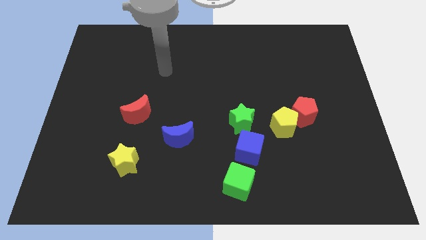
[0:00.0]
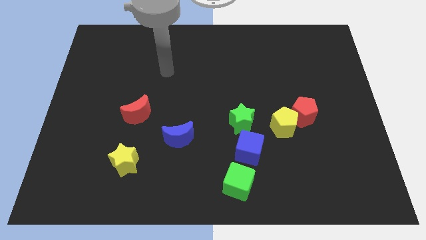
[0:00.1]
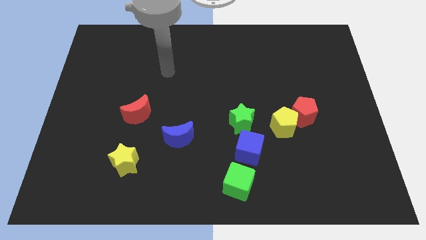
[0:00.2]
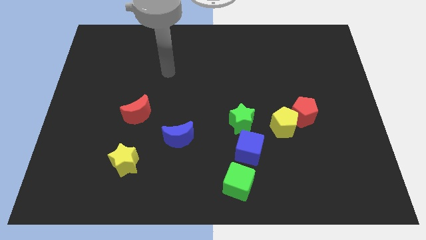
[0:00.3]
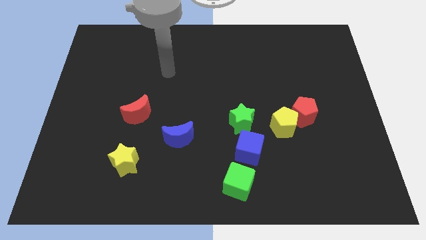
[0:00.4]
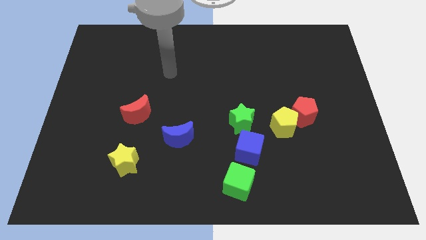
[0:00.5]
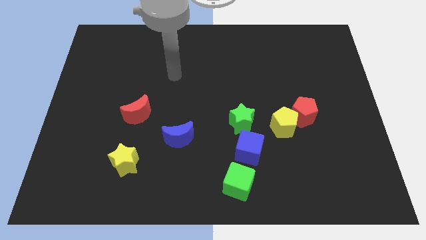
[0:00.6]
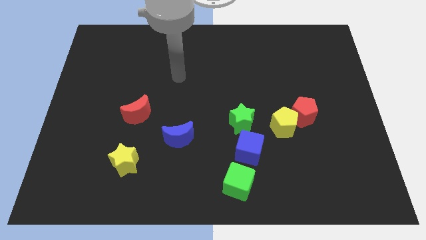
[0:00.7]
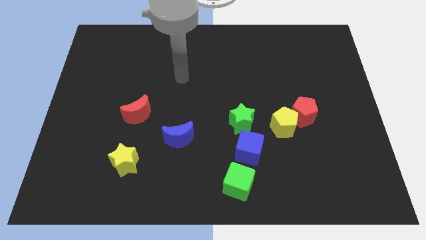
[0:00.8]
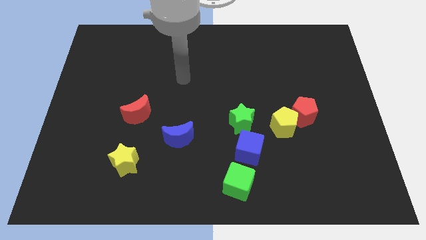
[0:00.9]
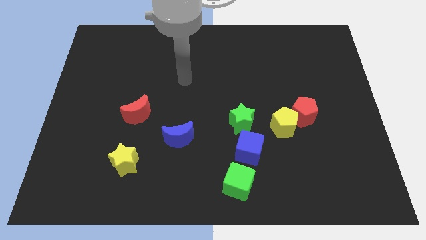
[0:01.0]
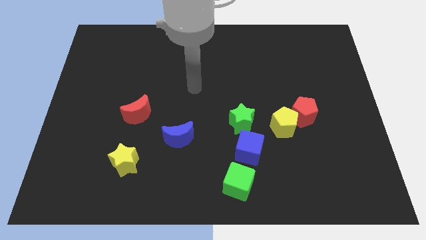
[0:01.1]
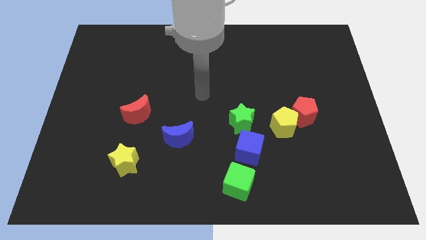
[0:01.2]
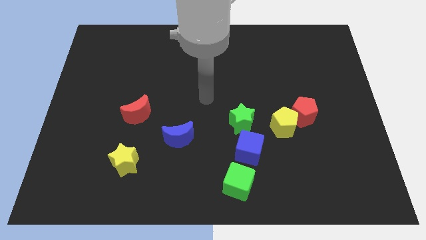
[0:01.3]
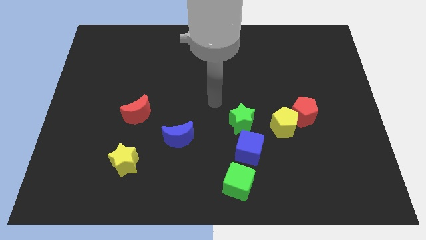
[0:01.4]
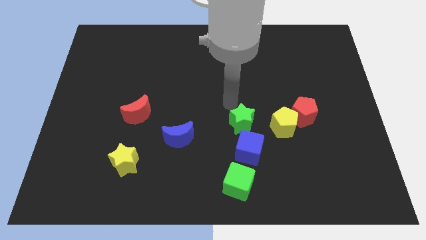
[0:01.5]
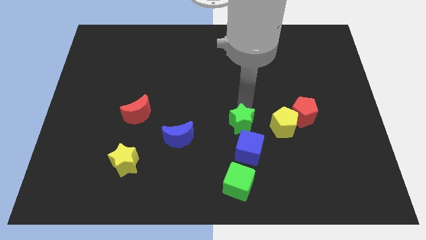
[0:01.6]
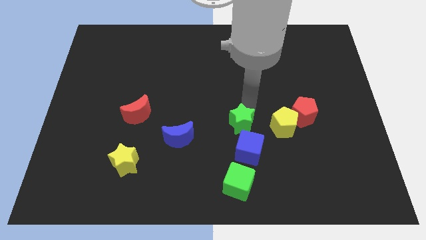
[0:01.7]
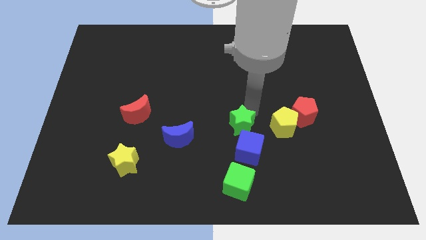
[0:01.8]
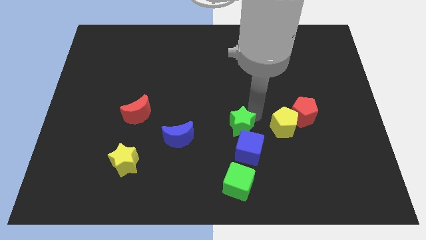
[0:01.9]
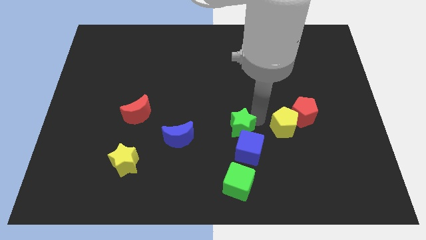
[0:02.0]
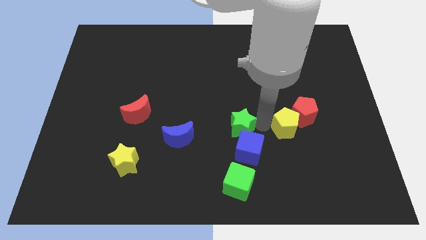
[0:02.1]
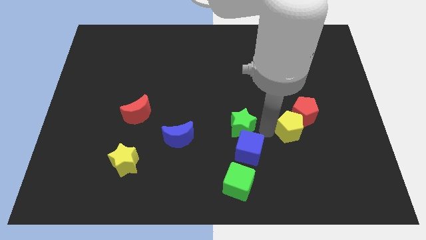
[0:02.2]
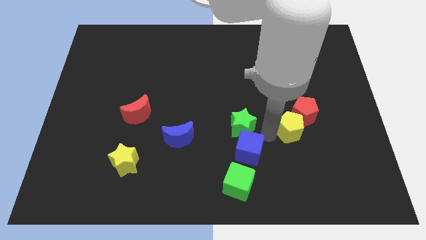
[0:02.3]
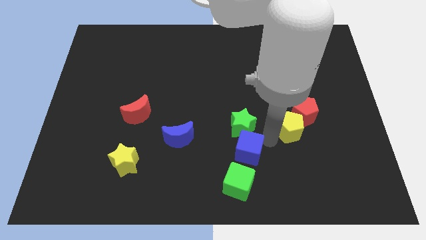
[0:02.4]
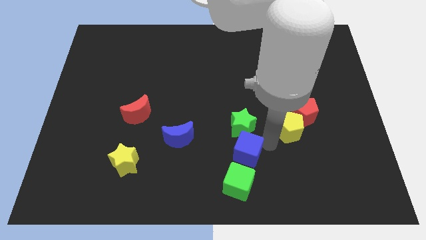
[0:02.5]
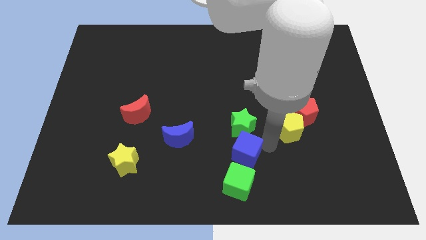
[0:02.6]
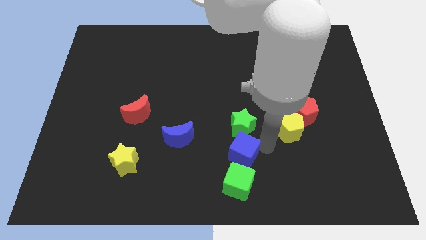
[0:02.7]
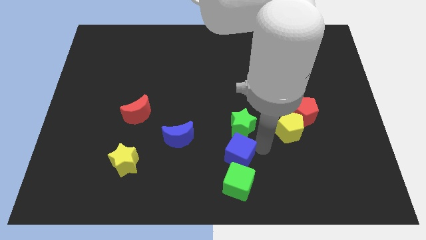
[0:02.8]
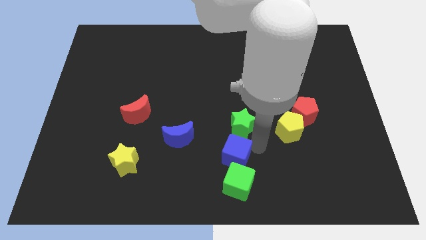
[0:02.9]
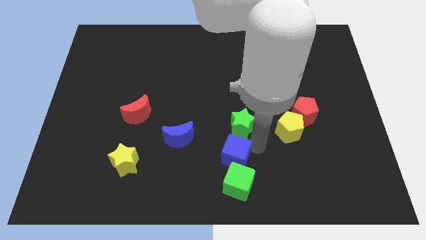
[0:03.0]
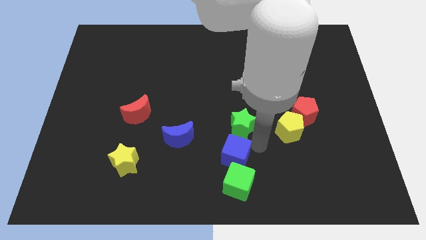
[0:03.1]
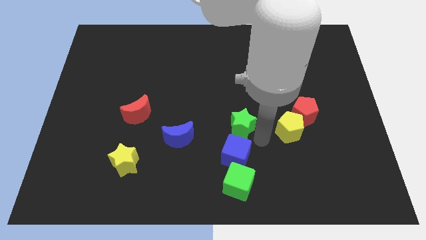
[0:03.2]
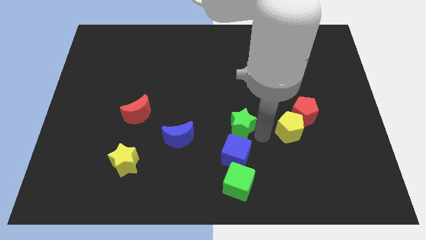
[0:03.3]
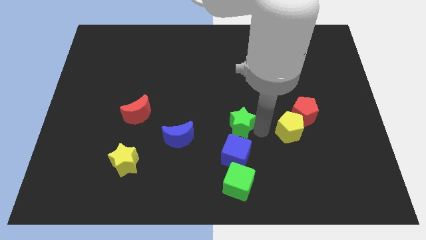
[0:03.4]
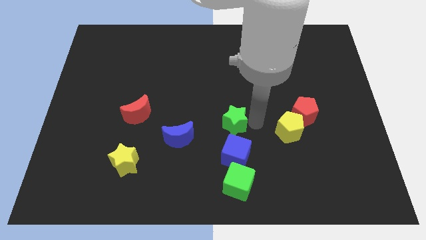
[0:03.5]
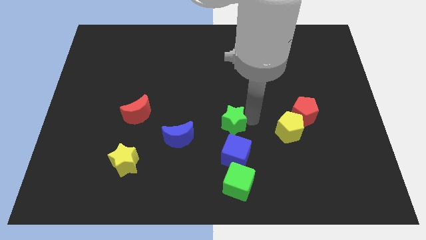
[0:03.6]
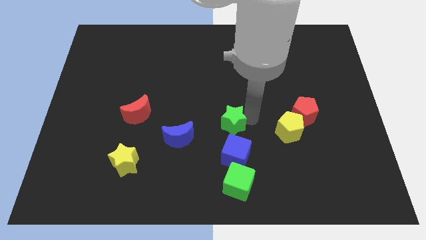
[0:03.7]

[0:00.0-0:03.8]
place the green star right to the blue moon

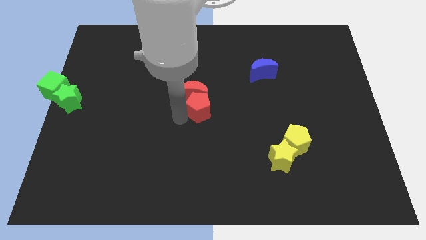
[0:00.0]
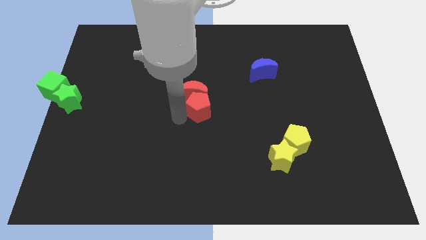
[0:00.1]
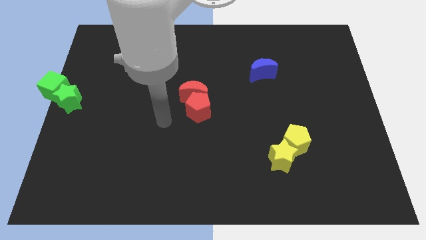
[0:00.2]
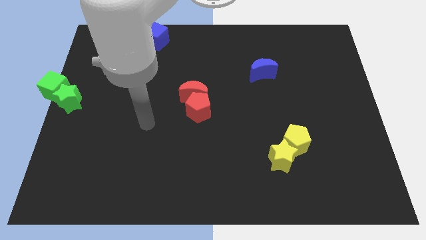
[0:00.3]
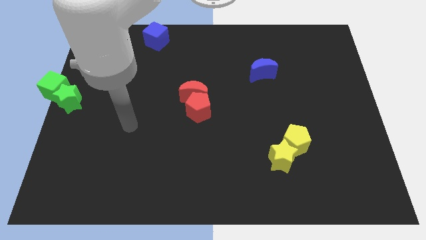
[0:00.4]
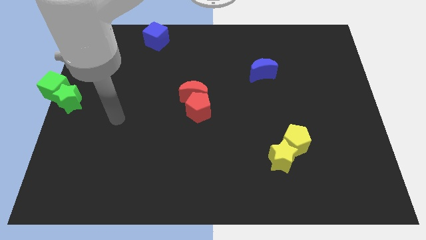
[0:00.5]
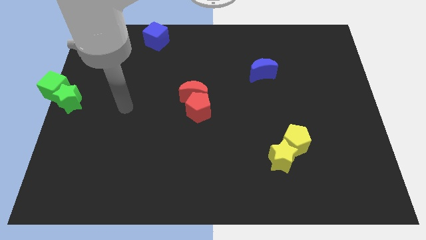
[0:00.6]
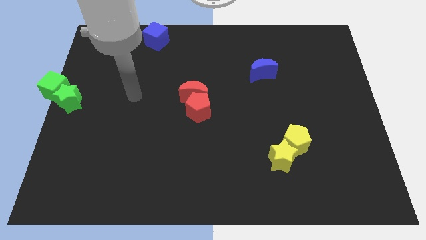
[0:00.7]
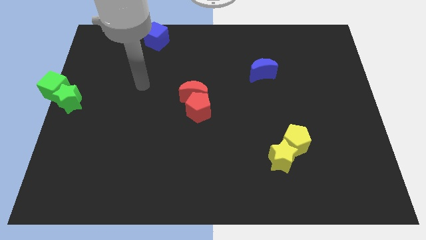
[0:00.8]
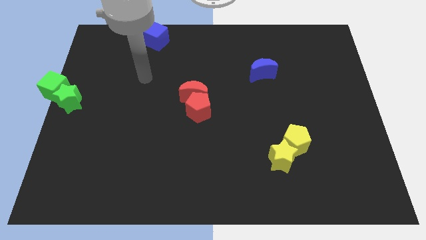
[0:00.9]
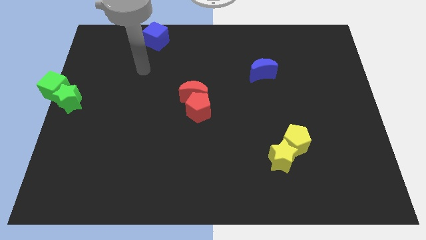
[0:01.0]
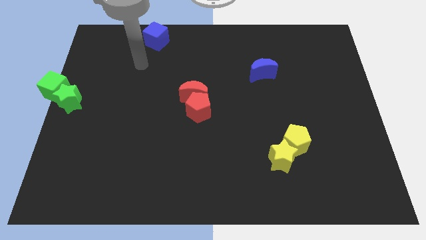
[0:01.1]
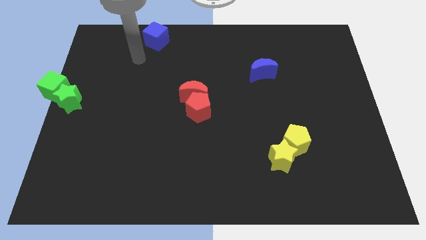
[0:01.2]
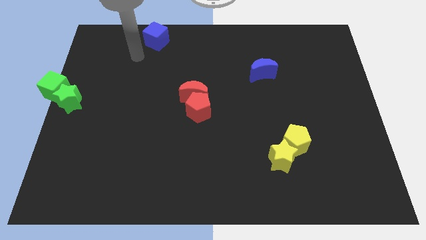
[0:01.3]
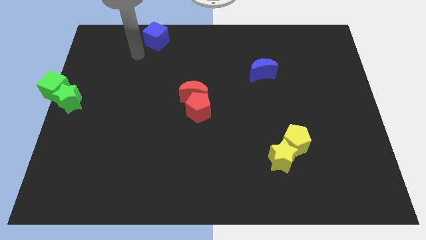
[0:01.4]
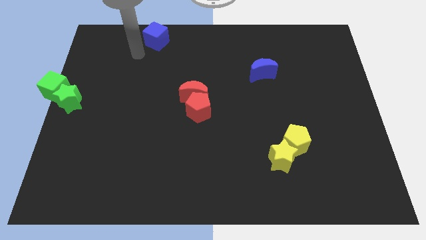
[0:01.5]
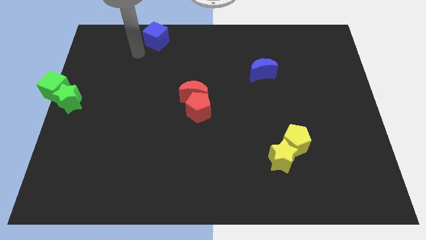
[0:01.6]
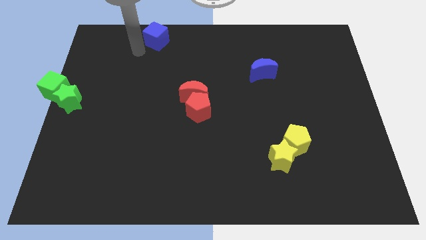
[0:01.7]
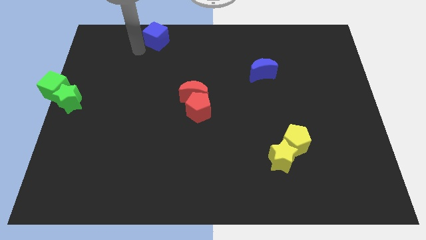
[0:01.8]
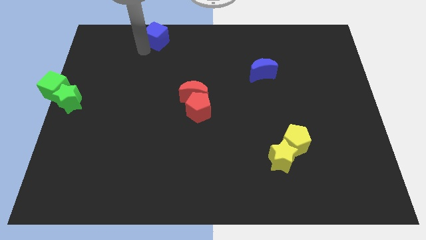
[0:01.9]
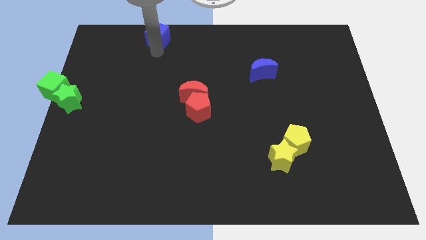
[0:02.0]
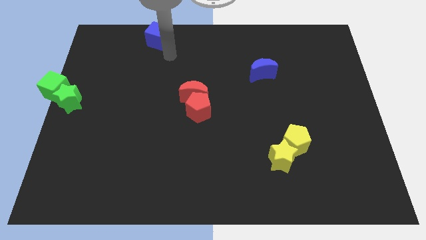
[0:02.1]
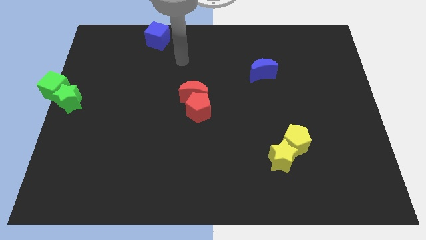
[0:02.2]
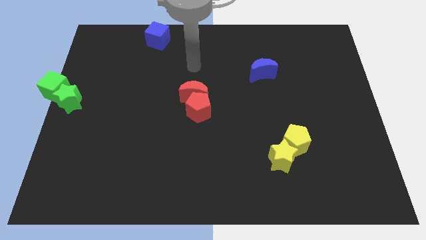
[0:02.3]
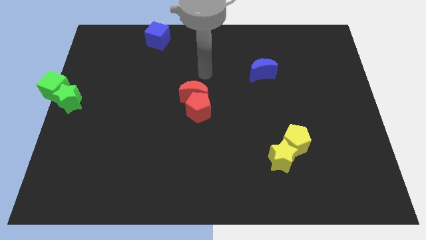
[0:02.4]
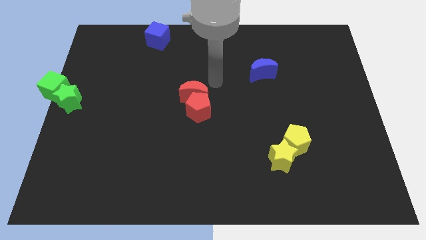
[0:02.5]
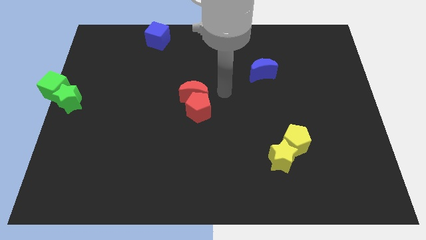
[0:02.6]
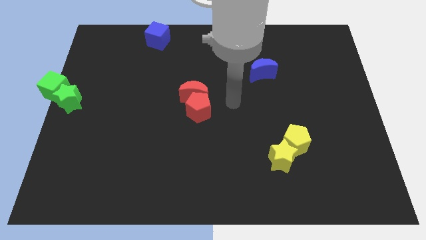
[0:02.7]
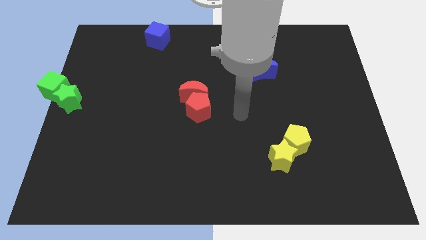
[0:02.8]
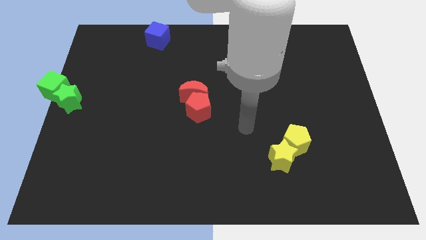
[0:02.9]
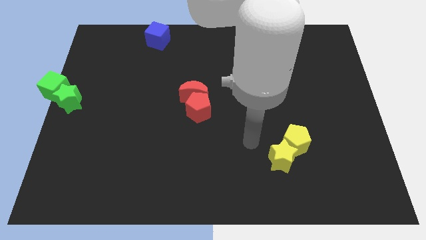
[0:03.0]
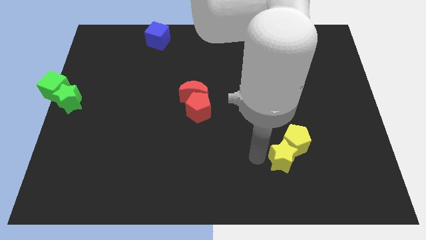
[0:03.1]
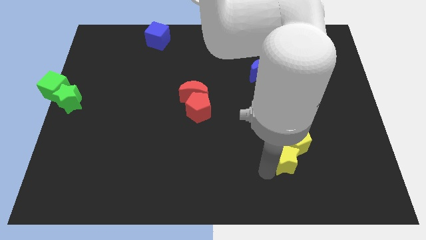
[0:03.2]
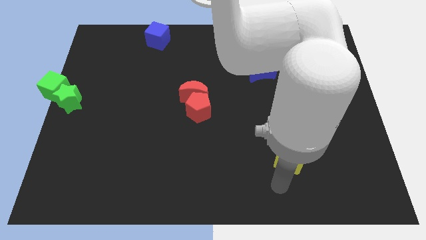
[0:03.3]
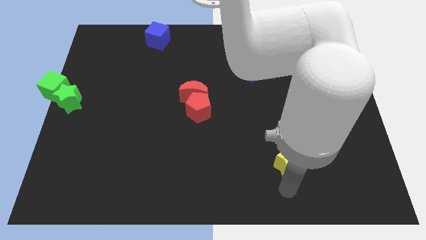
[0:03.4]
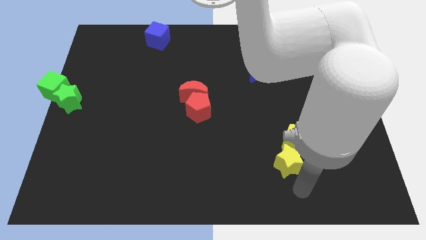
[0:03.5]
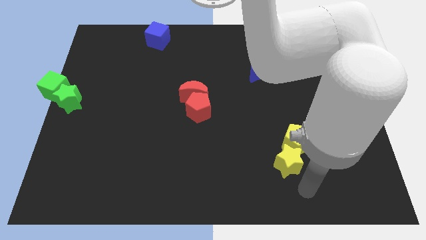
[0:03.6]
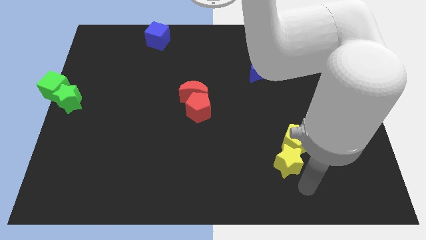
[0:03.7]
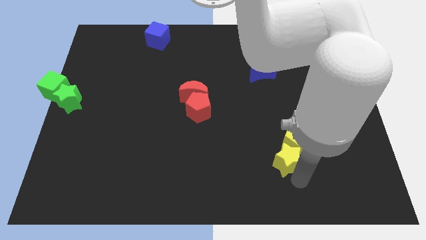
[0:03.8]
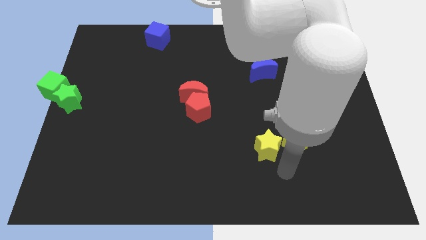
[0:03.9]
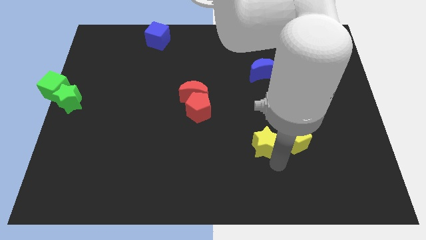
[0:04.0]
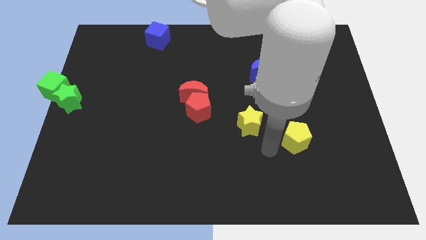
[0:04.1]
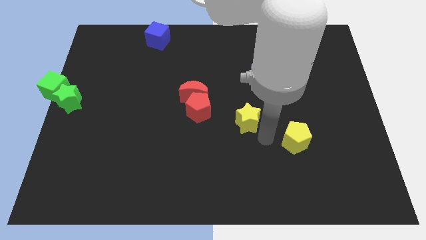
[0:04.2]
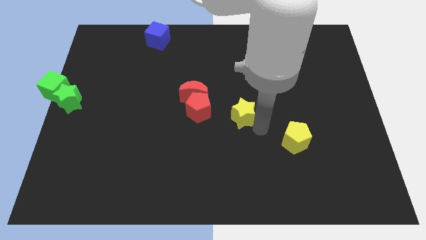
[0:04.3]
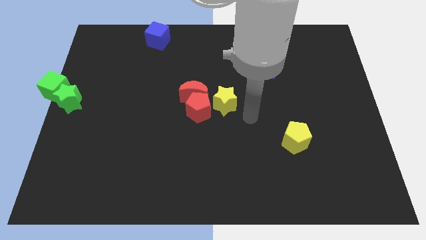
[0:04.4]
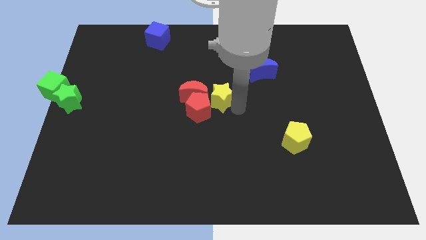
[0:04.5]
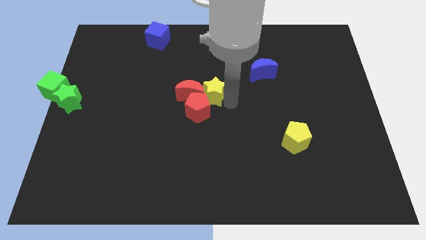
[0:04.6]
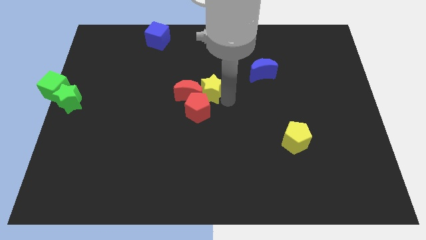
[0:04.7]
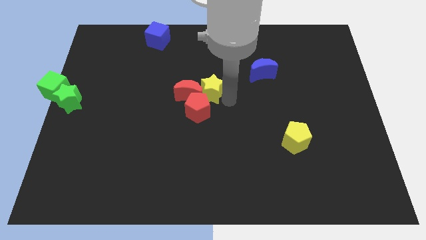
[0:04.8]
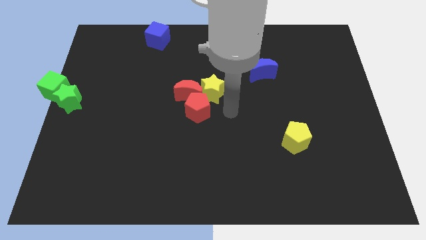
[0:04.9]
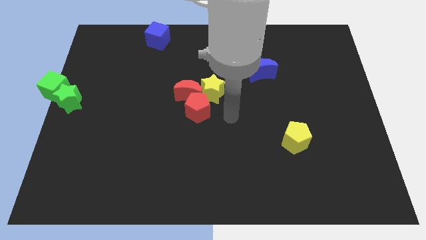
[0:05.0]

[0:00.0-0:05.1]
separate yellow star from the yellow pentagon

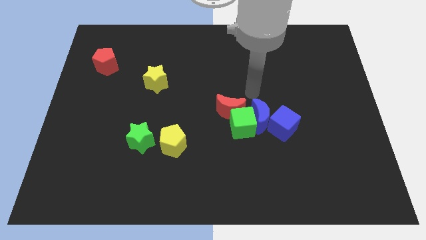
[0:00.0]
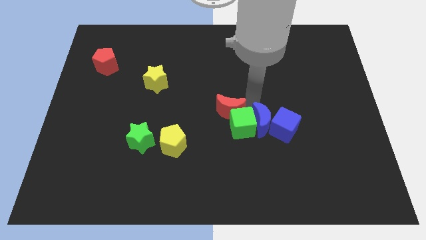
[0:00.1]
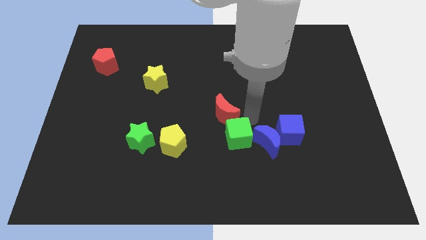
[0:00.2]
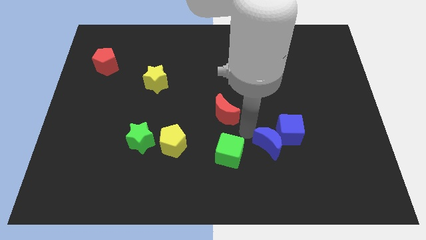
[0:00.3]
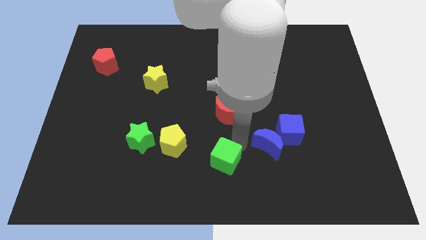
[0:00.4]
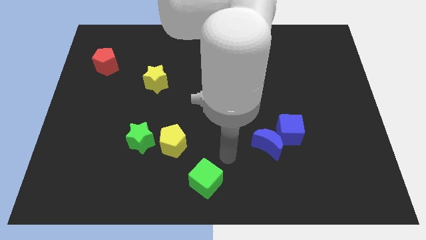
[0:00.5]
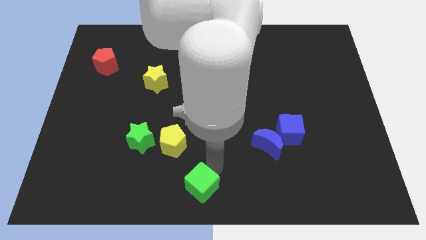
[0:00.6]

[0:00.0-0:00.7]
move green cube diagonally downwards
